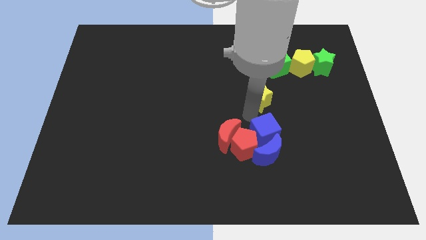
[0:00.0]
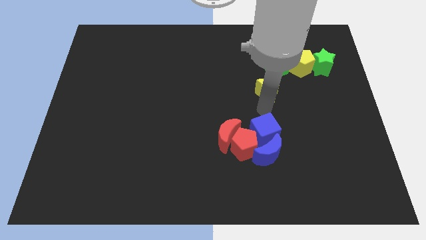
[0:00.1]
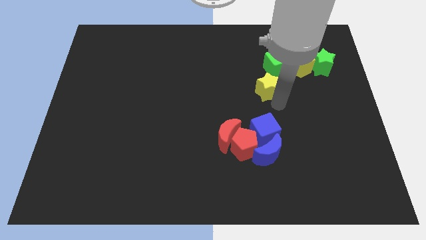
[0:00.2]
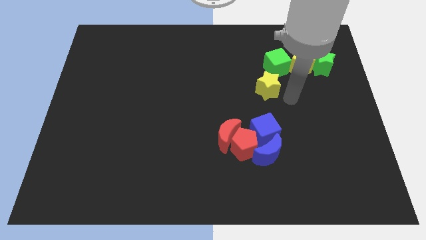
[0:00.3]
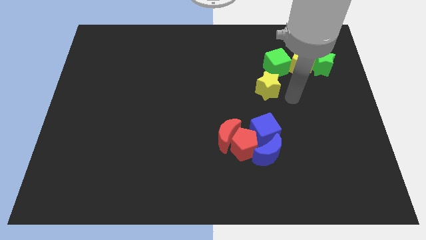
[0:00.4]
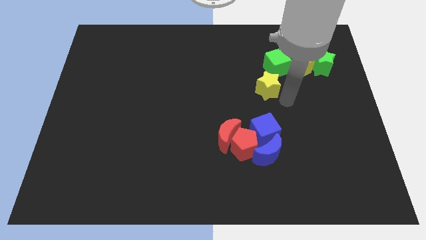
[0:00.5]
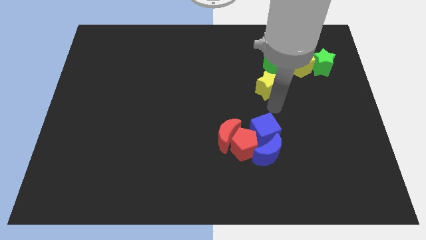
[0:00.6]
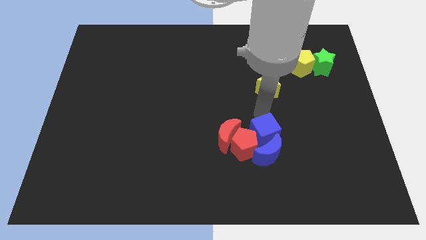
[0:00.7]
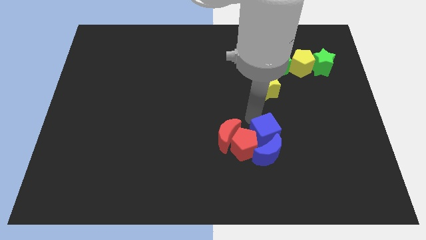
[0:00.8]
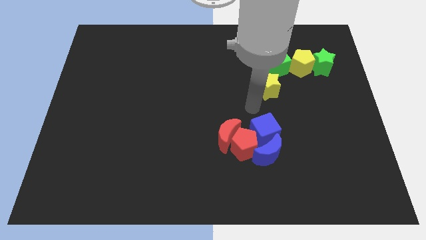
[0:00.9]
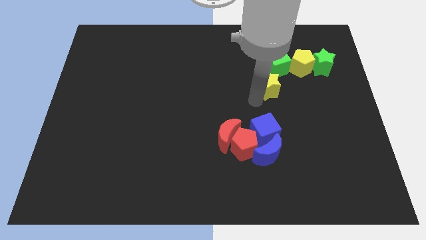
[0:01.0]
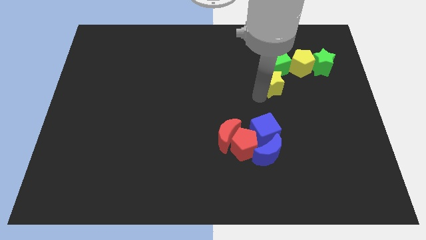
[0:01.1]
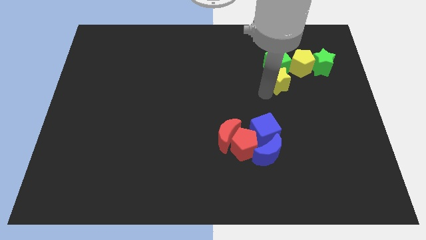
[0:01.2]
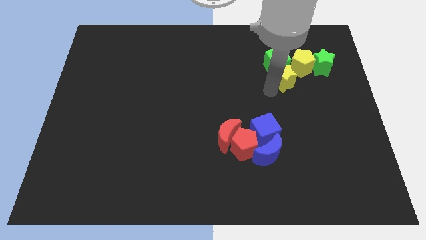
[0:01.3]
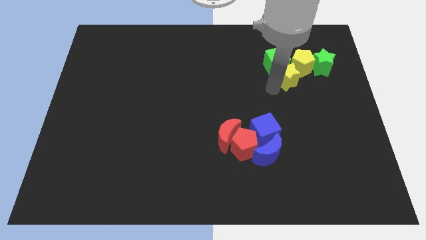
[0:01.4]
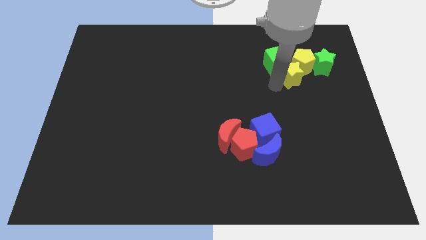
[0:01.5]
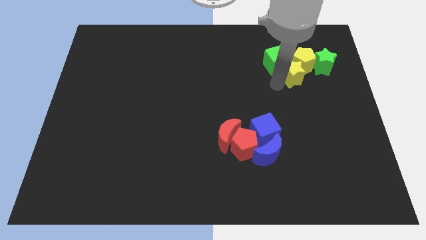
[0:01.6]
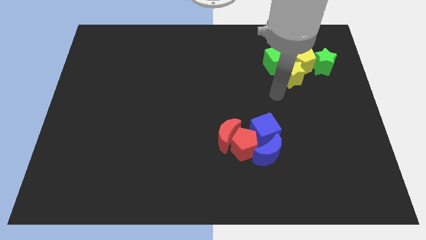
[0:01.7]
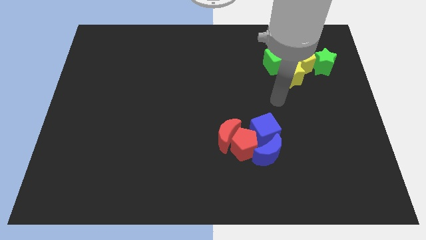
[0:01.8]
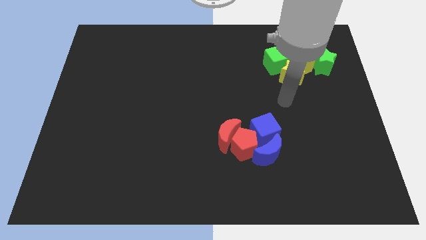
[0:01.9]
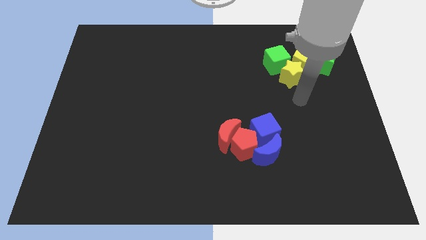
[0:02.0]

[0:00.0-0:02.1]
place the yellow star below into the yellow pentagon

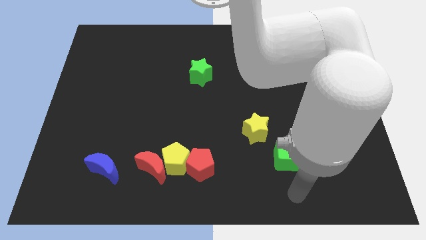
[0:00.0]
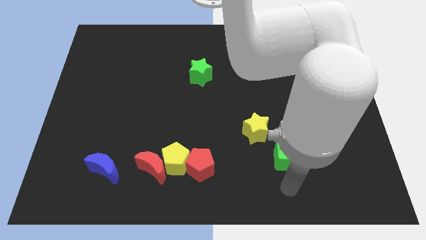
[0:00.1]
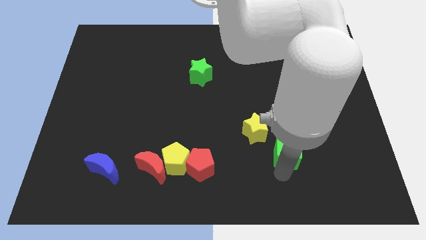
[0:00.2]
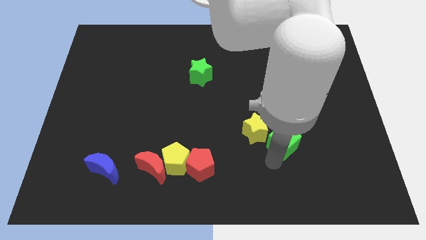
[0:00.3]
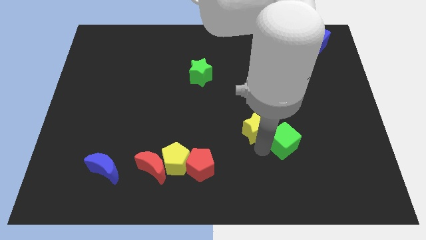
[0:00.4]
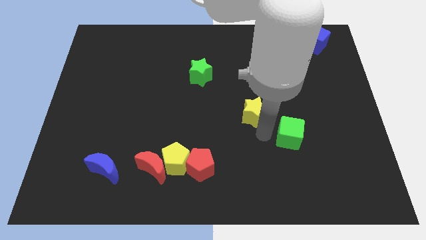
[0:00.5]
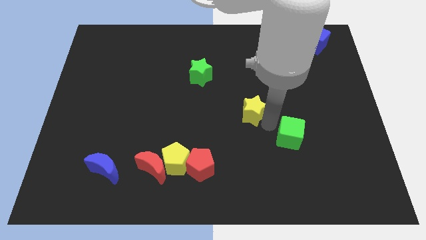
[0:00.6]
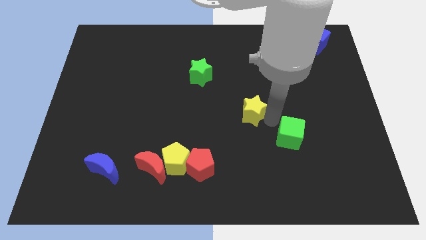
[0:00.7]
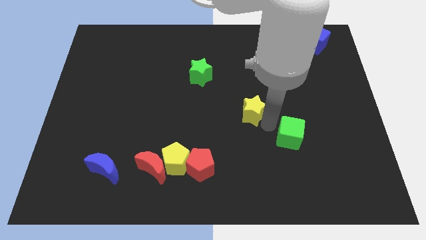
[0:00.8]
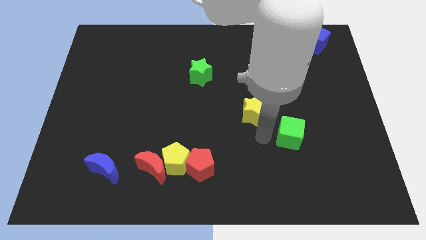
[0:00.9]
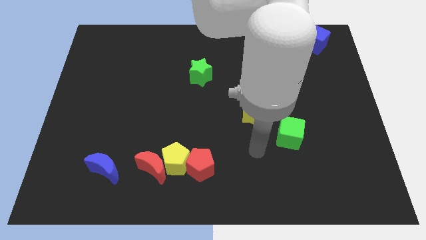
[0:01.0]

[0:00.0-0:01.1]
separate the green cube and yellow star

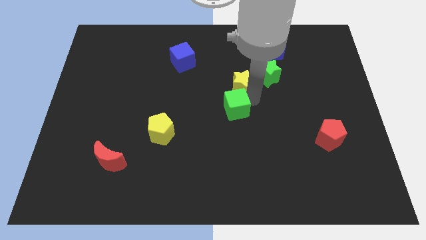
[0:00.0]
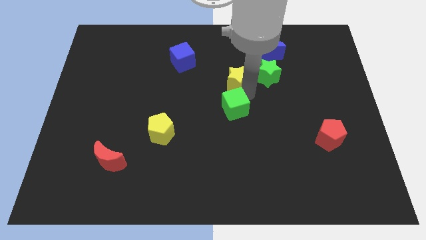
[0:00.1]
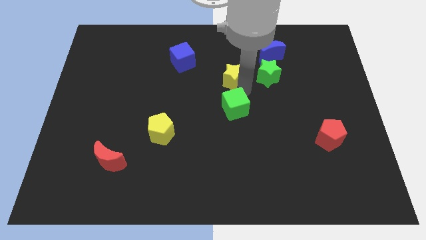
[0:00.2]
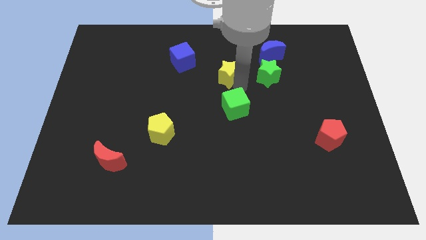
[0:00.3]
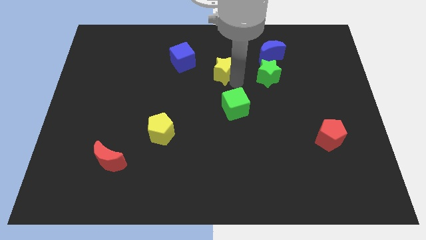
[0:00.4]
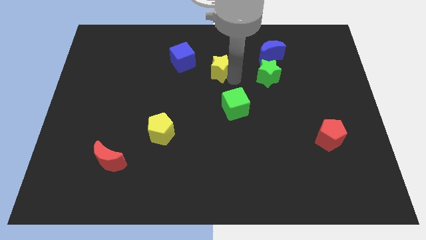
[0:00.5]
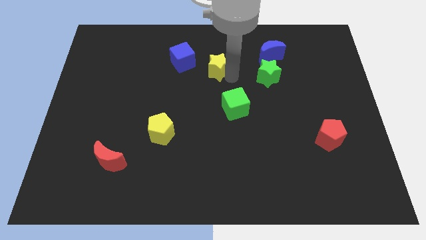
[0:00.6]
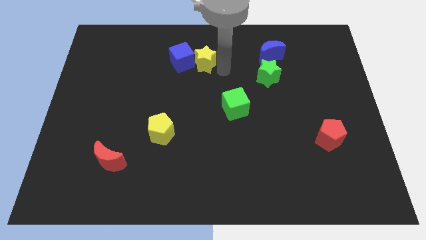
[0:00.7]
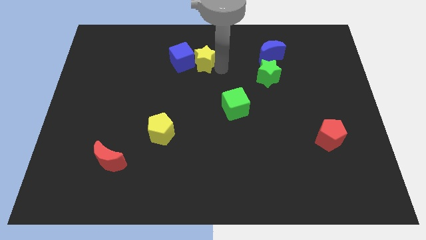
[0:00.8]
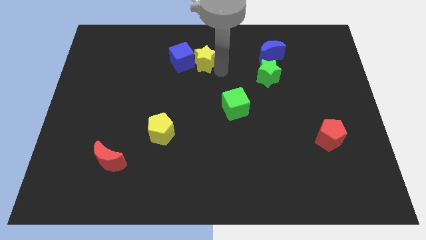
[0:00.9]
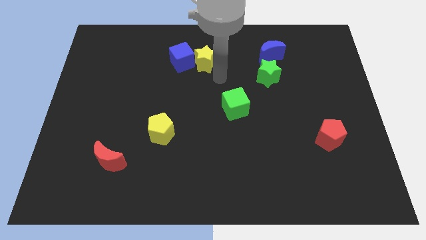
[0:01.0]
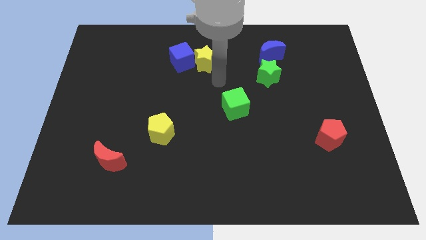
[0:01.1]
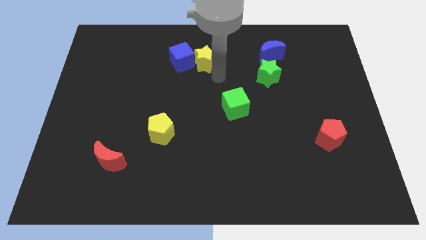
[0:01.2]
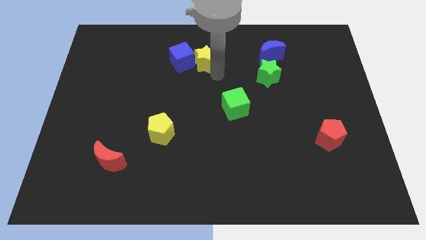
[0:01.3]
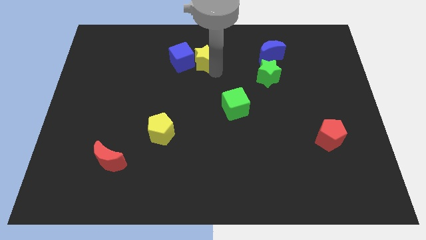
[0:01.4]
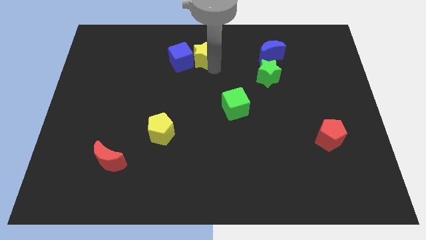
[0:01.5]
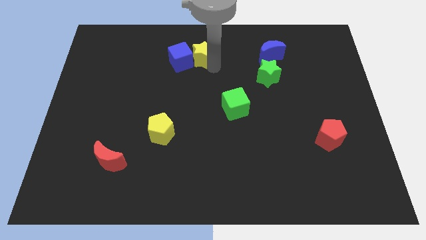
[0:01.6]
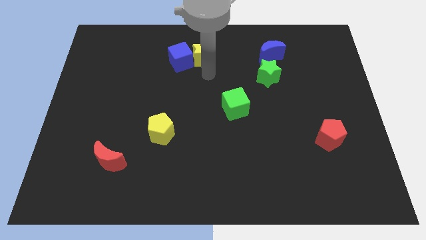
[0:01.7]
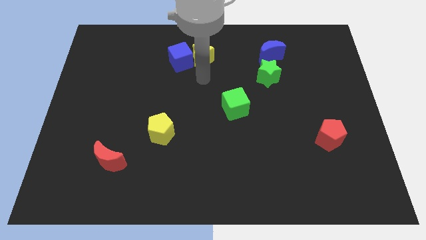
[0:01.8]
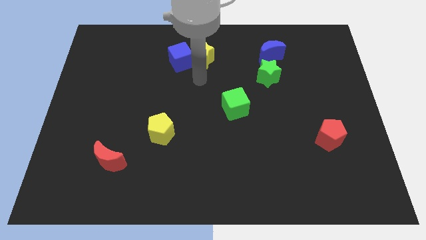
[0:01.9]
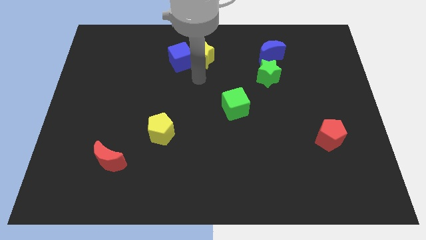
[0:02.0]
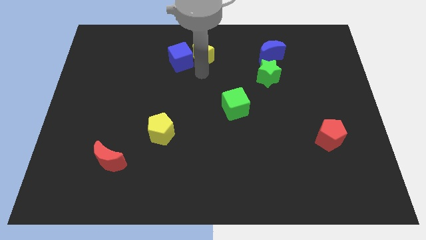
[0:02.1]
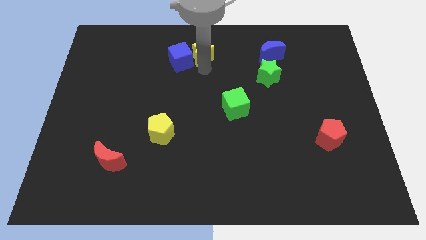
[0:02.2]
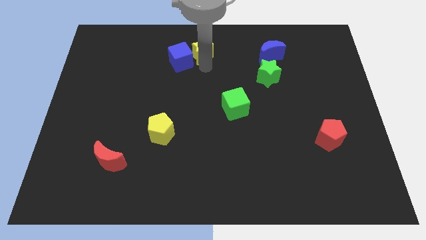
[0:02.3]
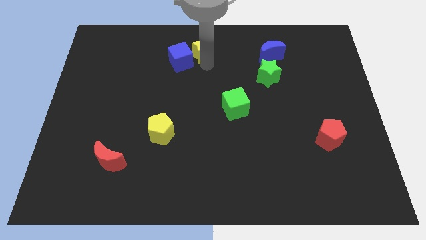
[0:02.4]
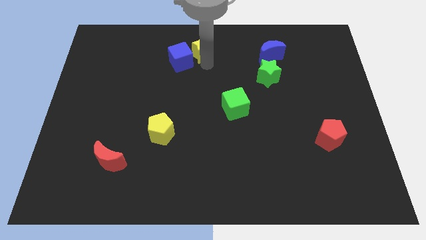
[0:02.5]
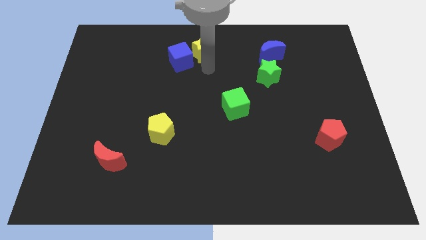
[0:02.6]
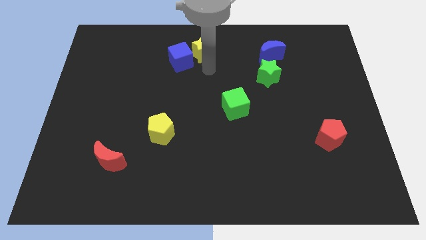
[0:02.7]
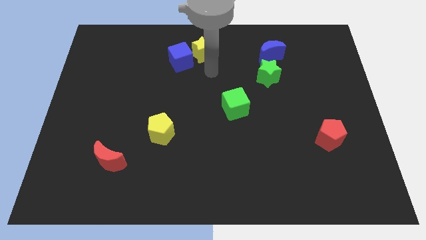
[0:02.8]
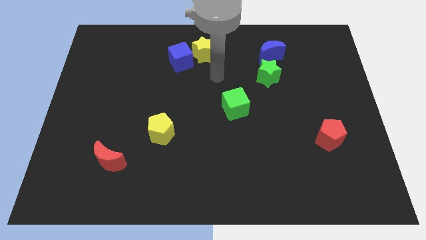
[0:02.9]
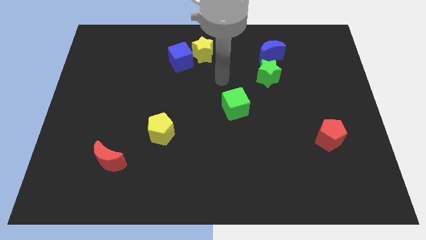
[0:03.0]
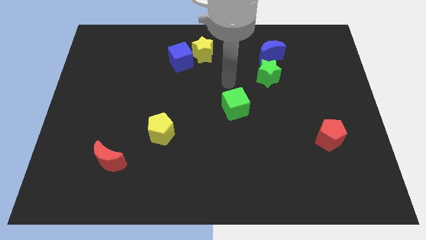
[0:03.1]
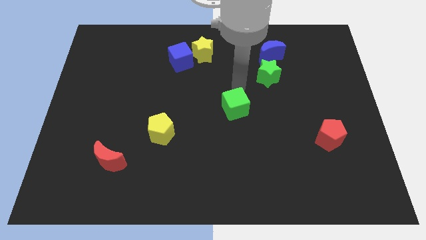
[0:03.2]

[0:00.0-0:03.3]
push the yellow star to the right of the blue cube

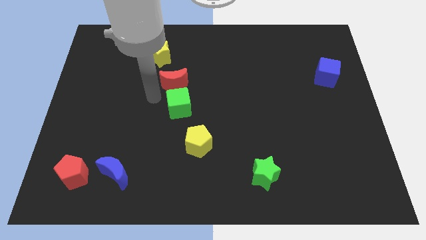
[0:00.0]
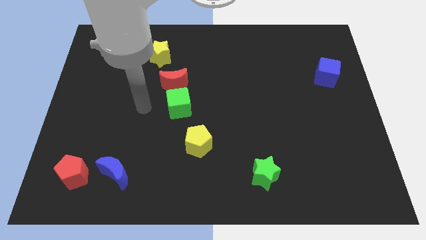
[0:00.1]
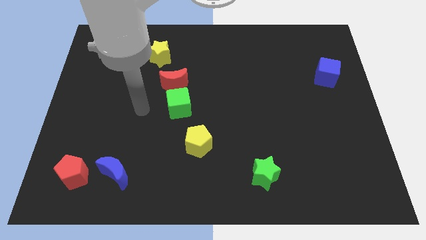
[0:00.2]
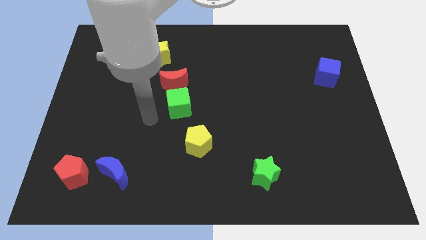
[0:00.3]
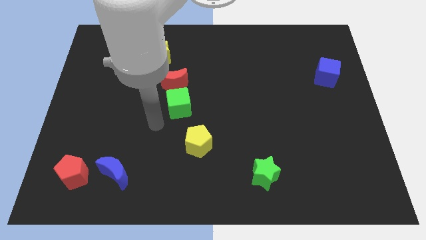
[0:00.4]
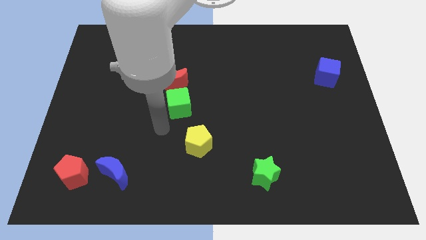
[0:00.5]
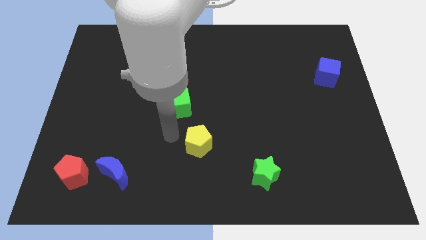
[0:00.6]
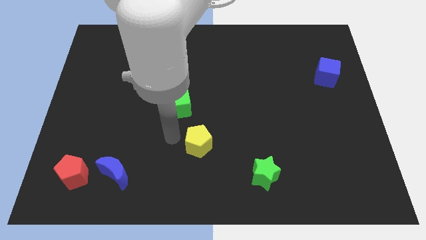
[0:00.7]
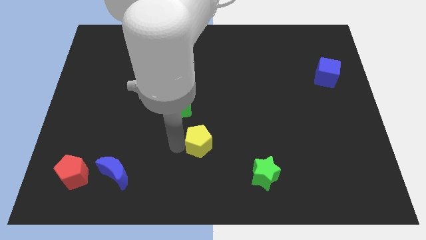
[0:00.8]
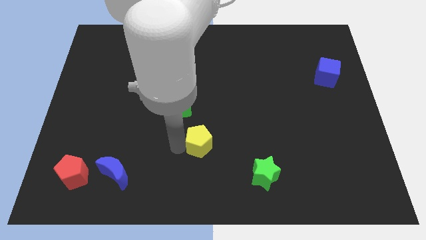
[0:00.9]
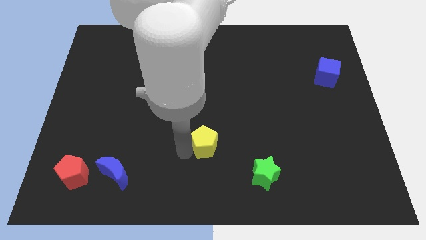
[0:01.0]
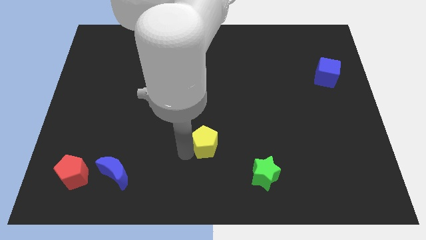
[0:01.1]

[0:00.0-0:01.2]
push slightly the pentagon to the right side of the board

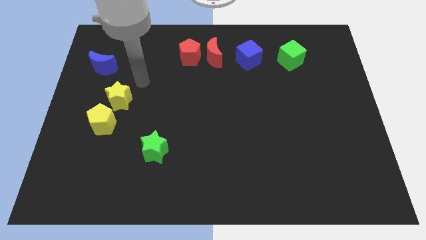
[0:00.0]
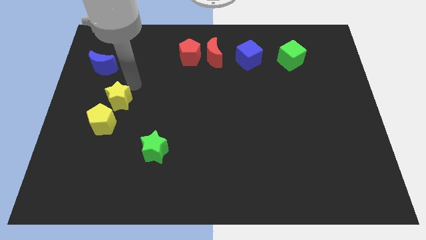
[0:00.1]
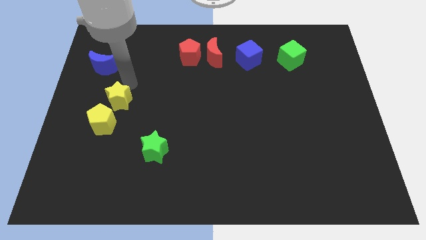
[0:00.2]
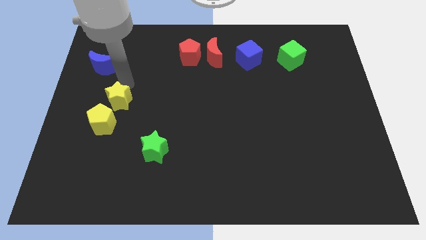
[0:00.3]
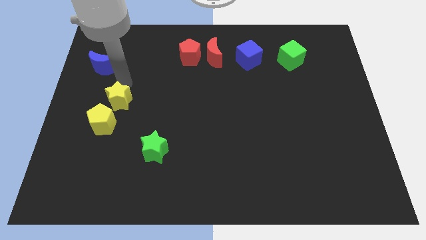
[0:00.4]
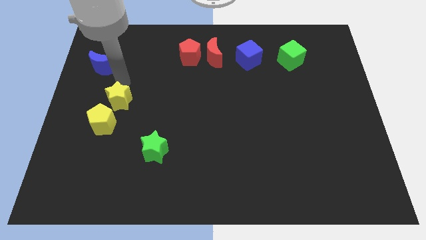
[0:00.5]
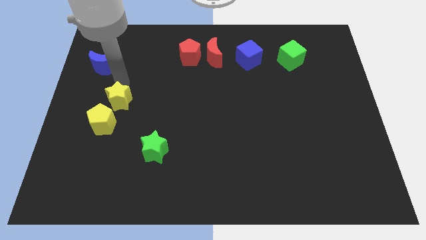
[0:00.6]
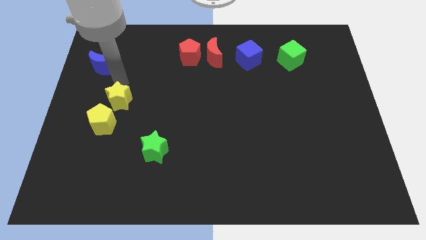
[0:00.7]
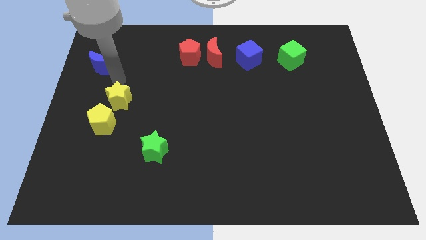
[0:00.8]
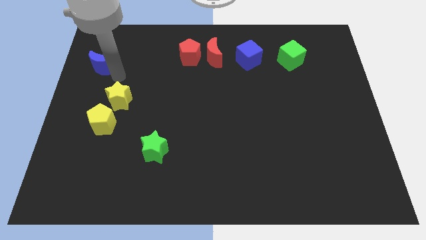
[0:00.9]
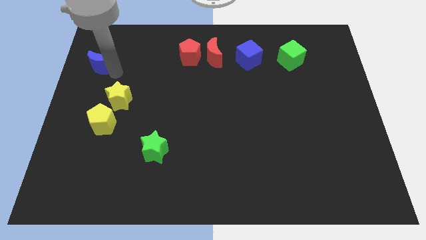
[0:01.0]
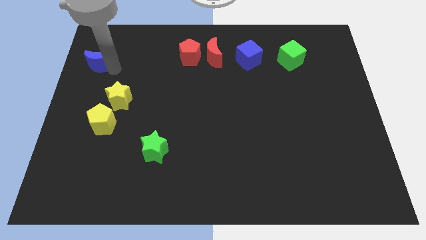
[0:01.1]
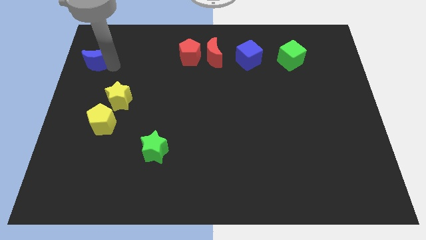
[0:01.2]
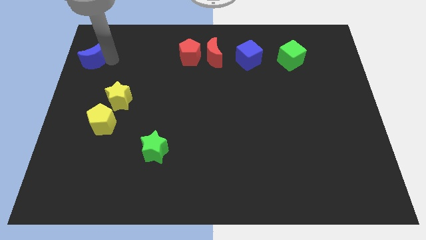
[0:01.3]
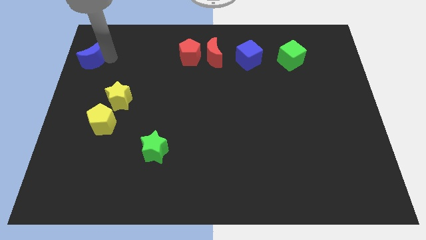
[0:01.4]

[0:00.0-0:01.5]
slide the blue moon to the top left of the board
